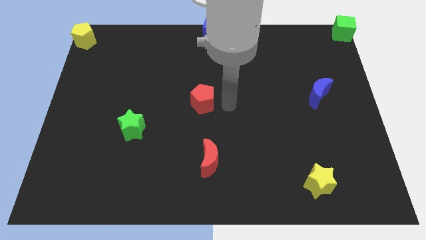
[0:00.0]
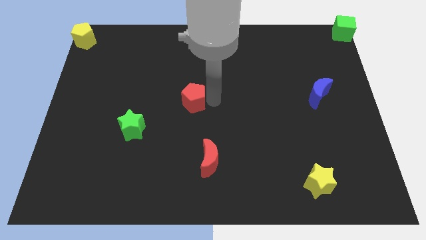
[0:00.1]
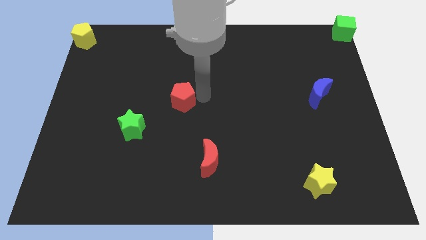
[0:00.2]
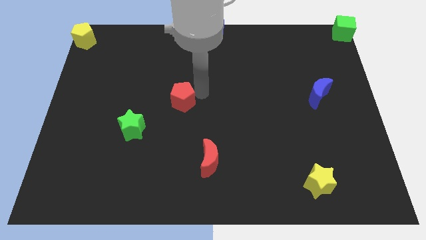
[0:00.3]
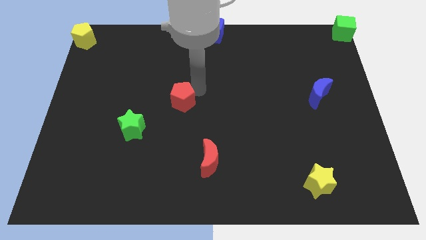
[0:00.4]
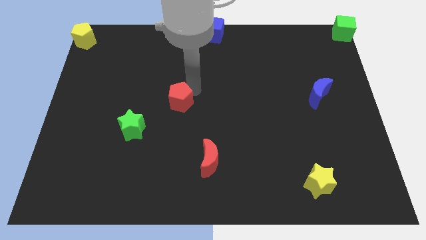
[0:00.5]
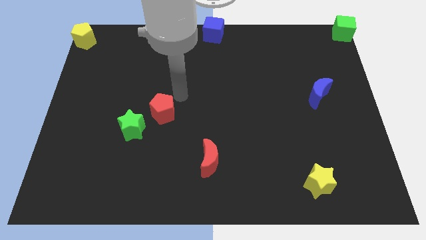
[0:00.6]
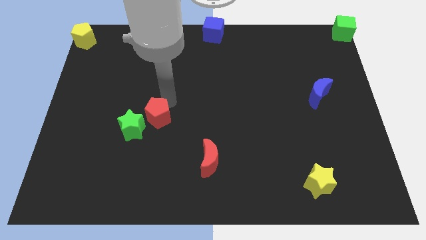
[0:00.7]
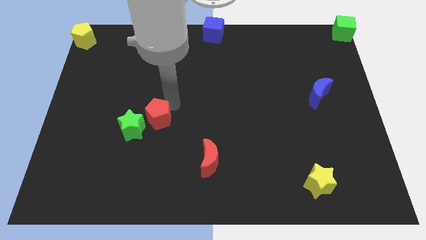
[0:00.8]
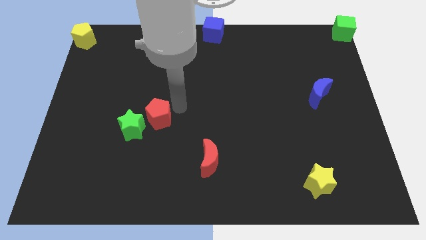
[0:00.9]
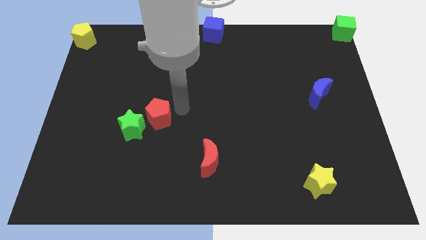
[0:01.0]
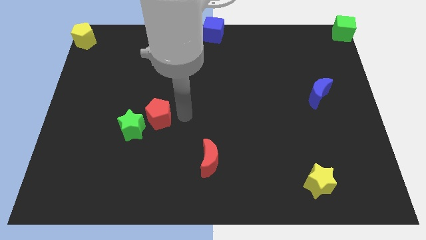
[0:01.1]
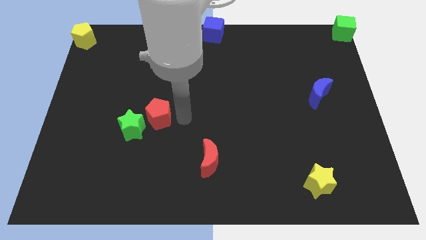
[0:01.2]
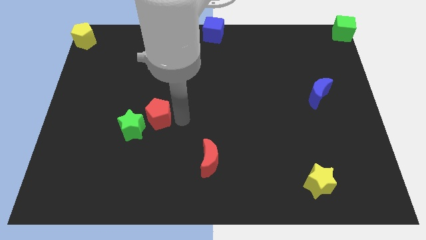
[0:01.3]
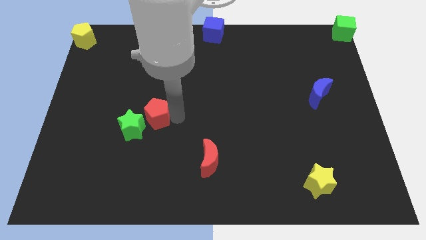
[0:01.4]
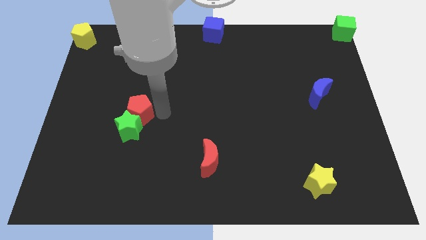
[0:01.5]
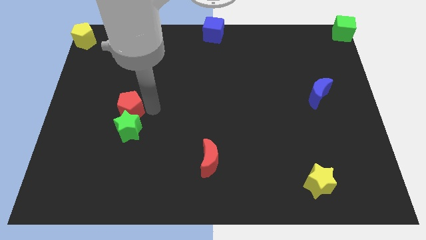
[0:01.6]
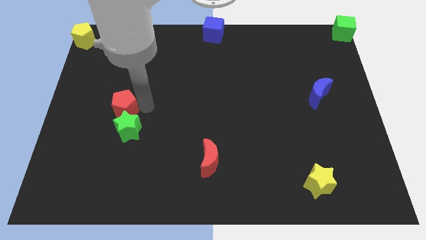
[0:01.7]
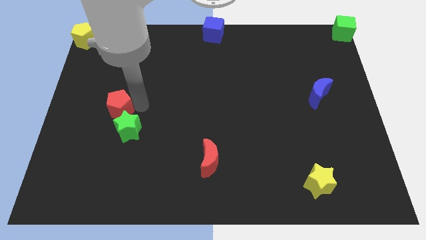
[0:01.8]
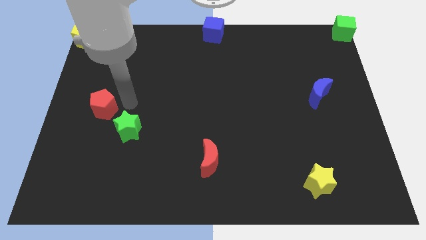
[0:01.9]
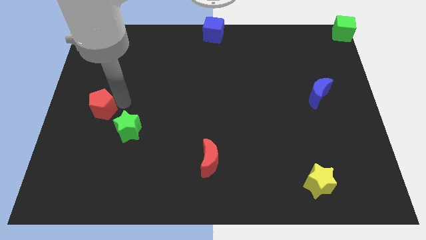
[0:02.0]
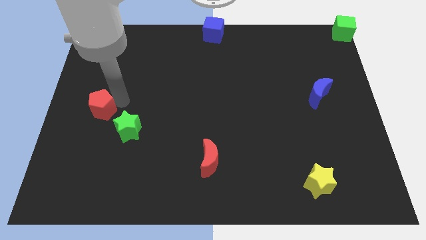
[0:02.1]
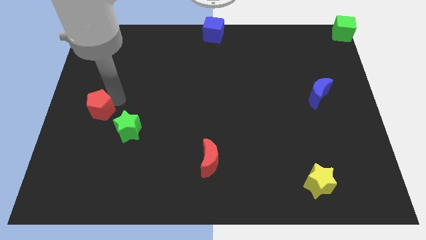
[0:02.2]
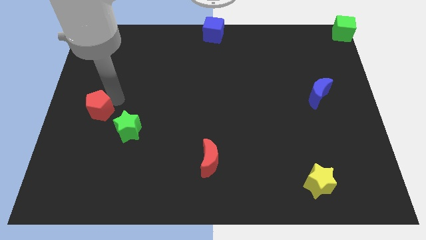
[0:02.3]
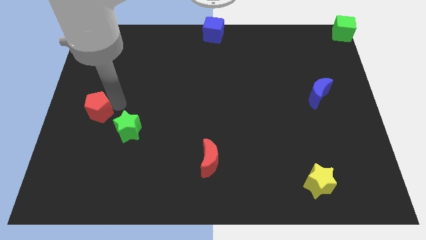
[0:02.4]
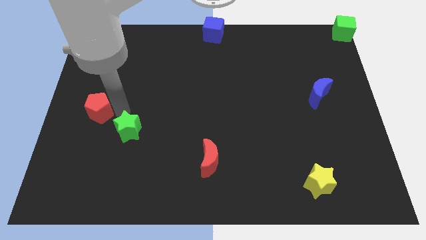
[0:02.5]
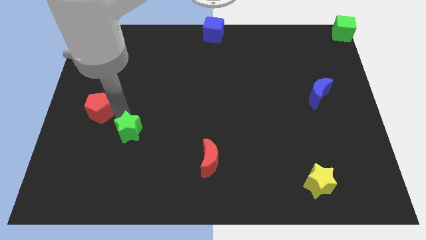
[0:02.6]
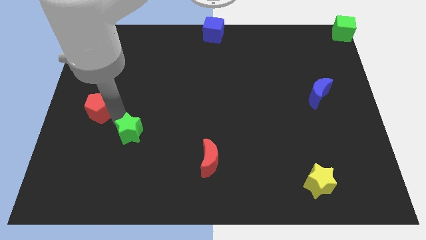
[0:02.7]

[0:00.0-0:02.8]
put the red pentagon at the top left side of the green star

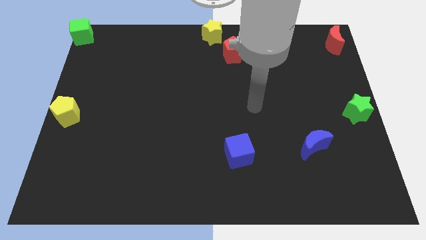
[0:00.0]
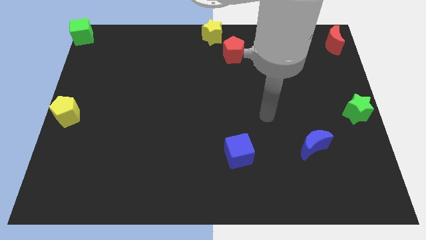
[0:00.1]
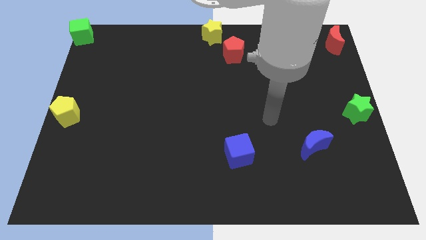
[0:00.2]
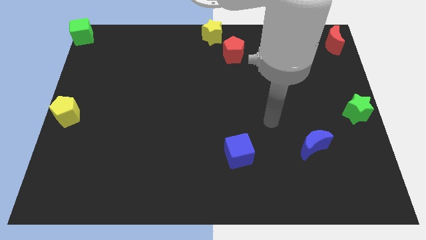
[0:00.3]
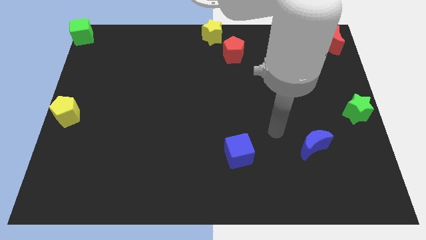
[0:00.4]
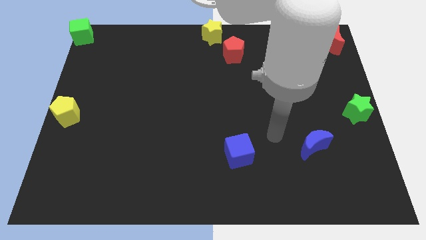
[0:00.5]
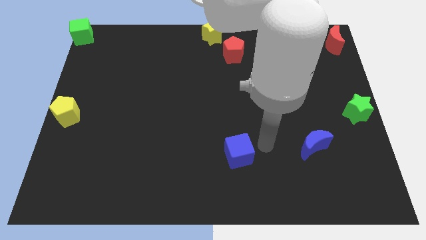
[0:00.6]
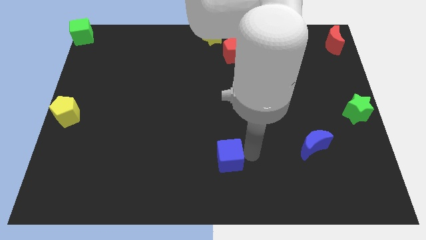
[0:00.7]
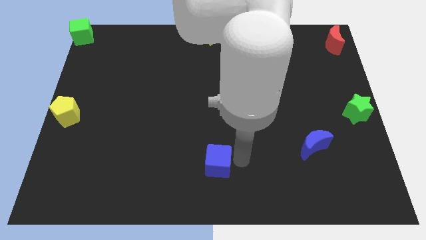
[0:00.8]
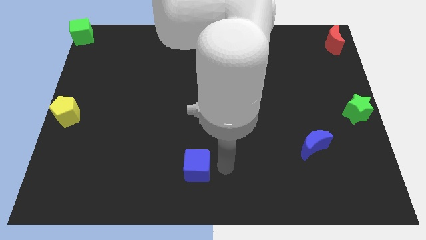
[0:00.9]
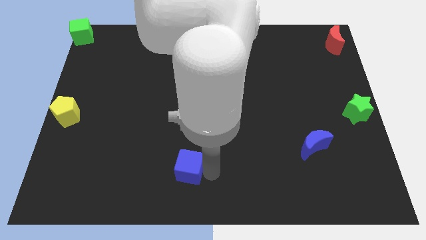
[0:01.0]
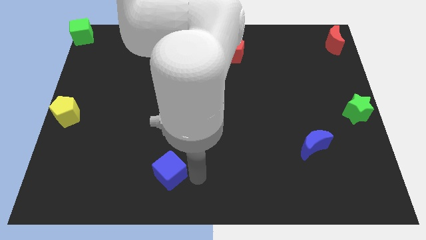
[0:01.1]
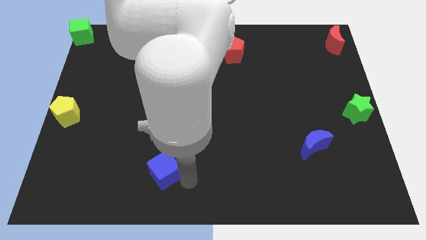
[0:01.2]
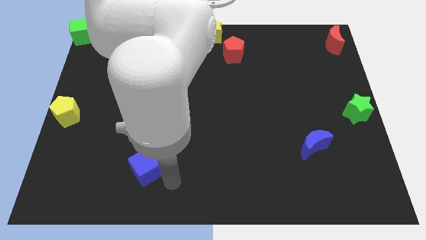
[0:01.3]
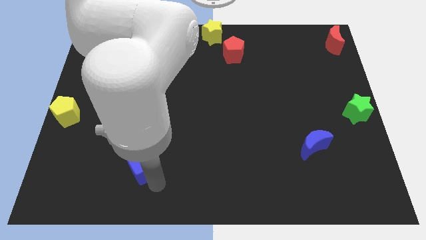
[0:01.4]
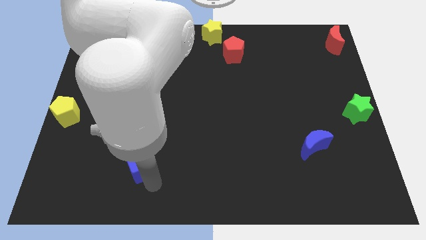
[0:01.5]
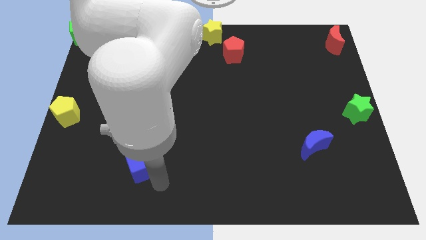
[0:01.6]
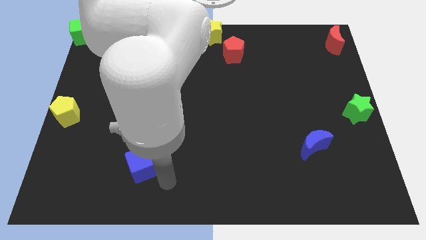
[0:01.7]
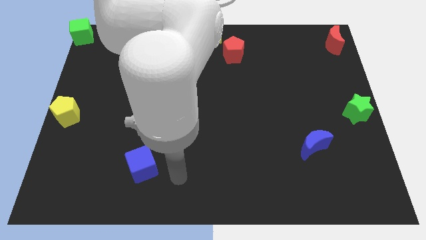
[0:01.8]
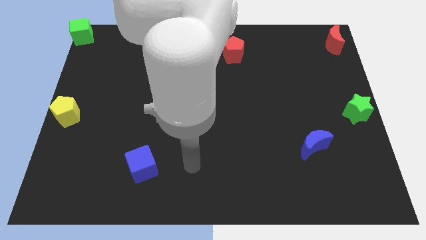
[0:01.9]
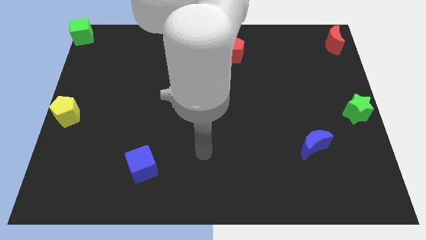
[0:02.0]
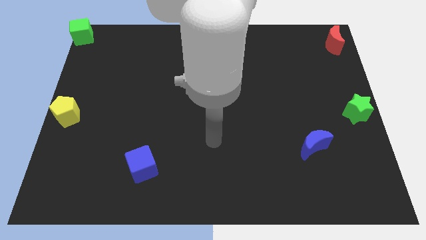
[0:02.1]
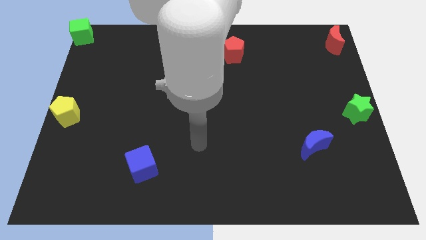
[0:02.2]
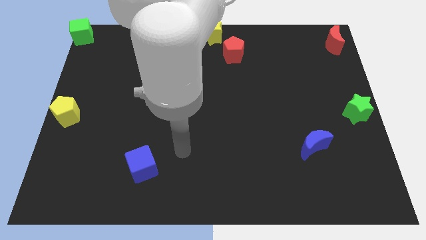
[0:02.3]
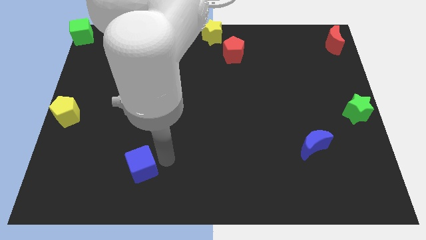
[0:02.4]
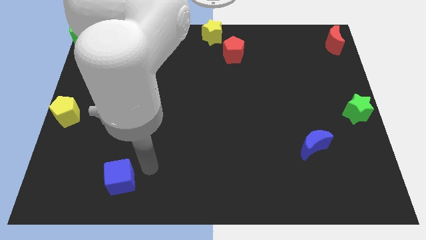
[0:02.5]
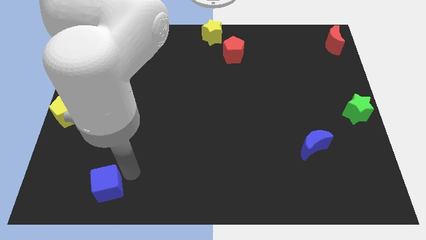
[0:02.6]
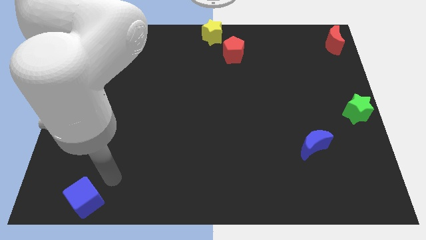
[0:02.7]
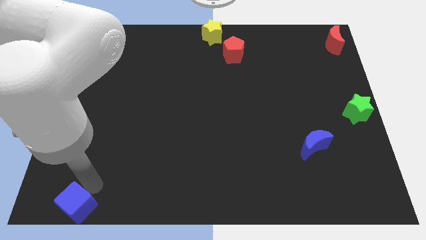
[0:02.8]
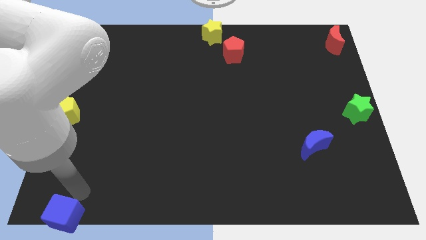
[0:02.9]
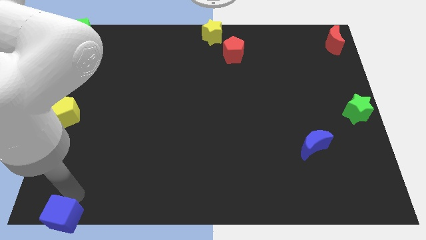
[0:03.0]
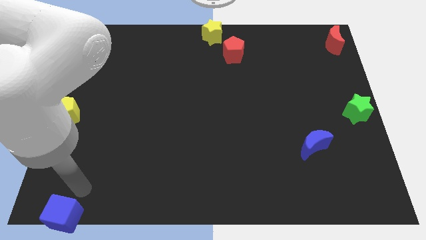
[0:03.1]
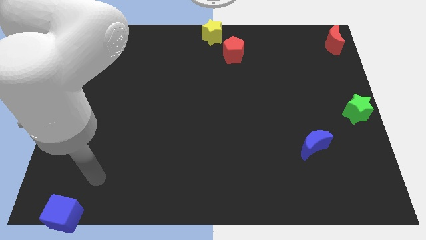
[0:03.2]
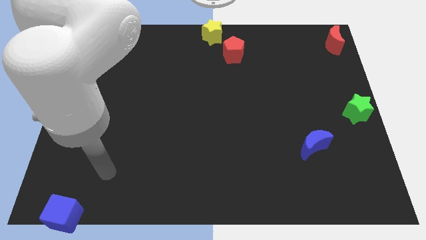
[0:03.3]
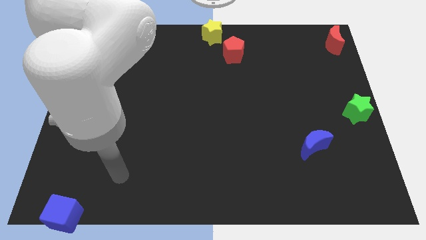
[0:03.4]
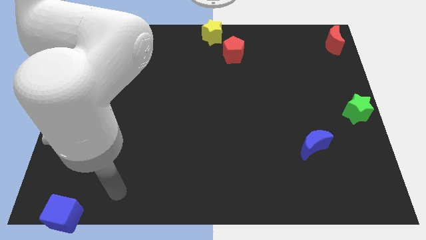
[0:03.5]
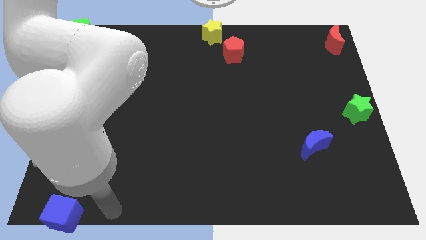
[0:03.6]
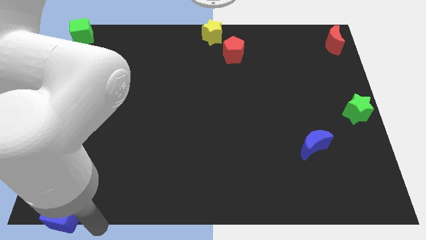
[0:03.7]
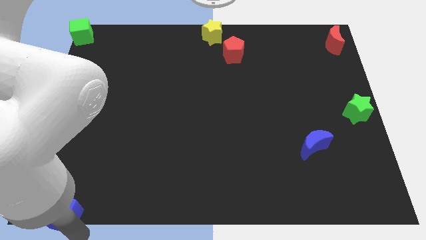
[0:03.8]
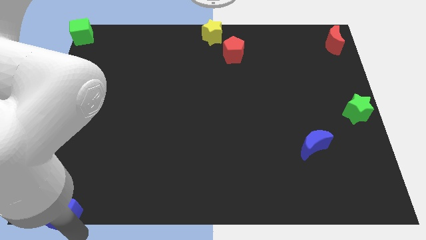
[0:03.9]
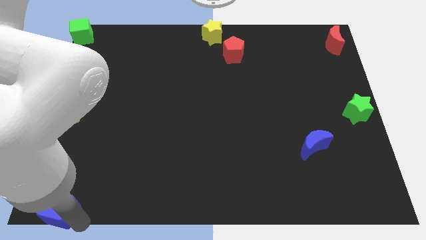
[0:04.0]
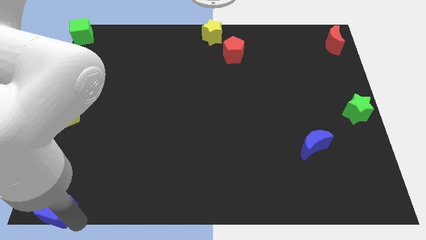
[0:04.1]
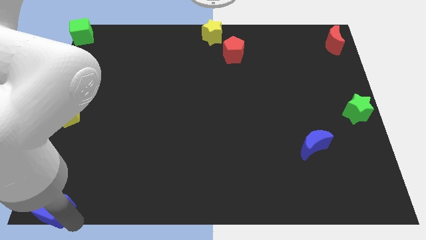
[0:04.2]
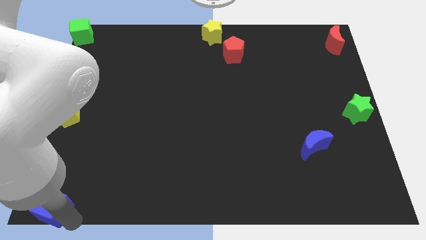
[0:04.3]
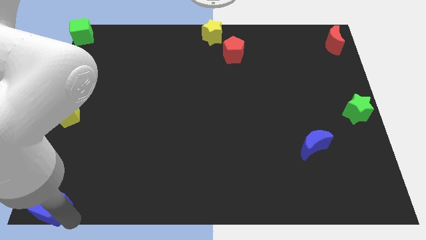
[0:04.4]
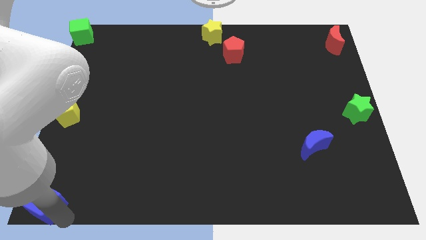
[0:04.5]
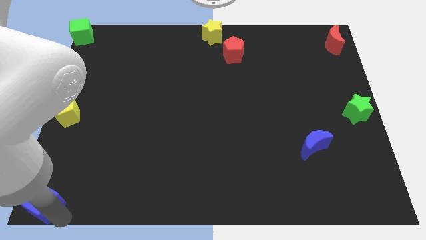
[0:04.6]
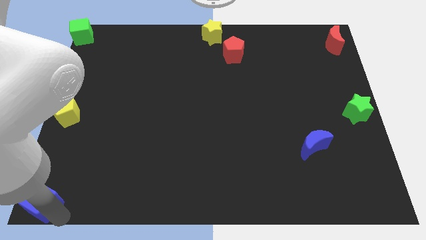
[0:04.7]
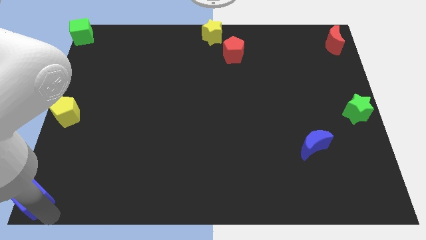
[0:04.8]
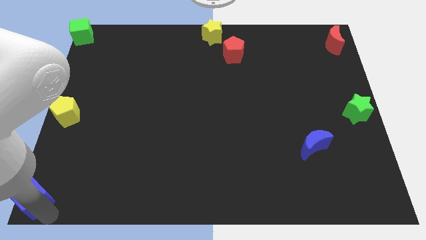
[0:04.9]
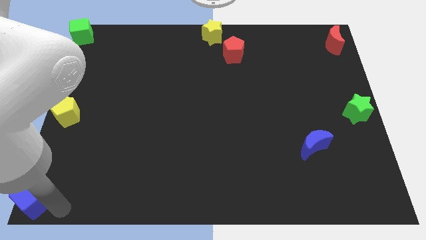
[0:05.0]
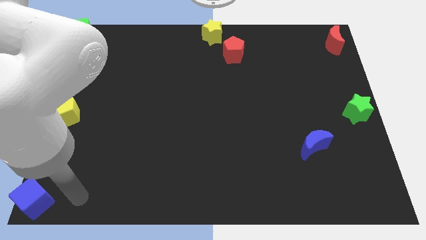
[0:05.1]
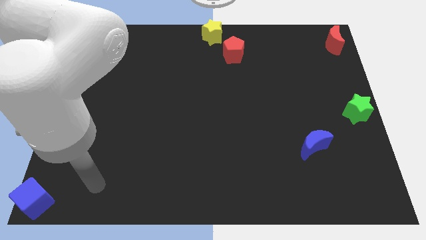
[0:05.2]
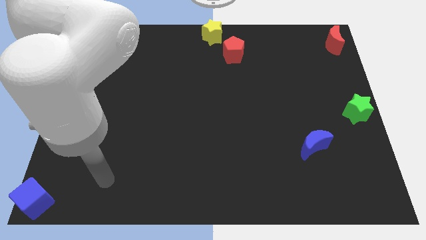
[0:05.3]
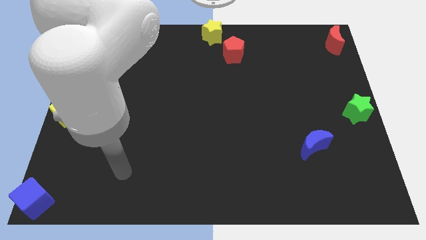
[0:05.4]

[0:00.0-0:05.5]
push the blue cube to the bottom left corner of the board

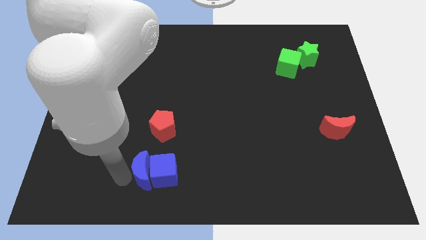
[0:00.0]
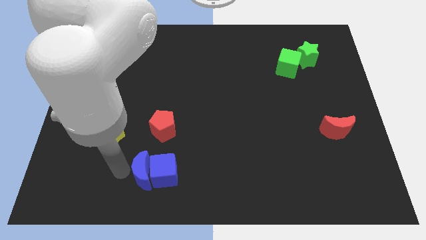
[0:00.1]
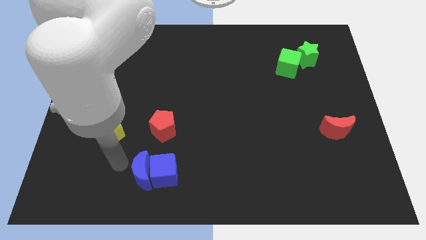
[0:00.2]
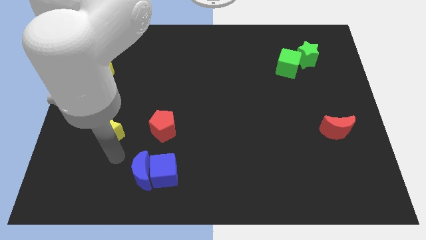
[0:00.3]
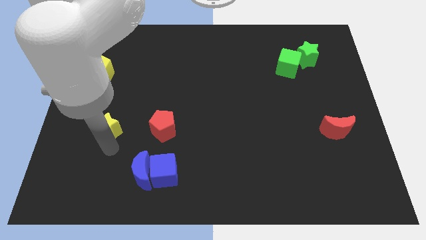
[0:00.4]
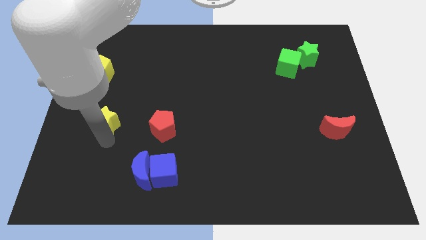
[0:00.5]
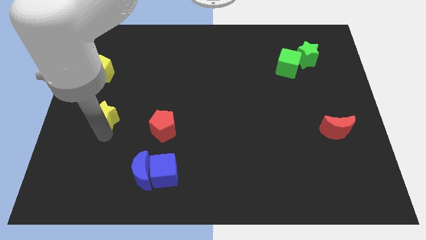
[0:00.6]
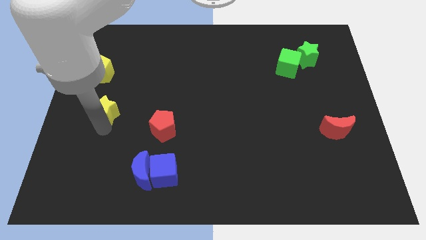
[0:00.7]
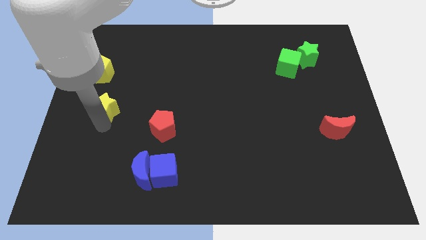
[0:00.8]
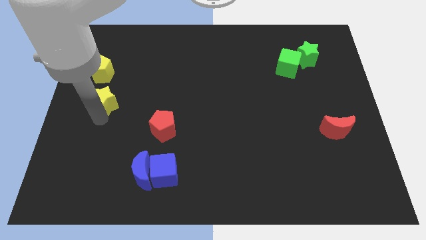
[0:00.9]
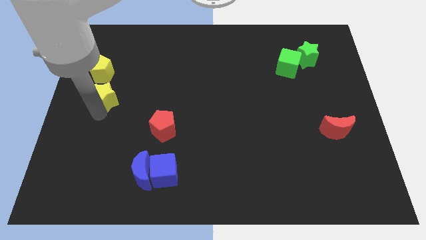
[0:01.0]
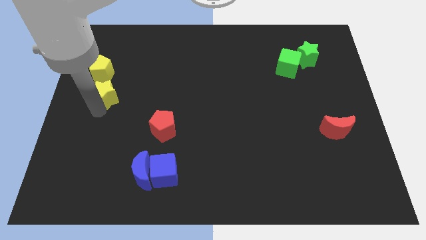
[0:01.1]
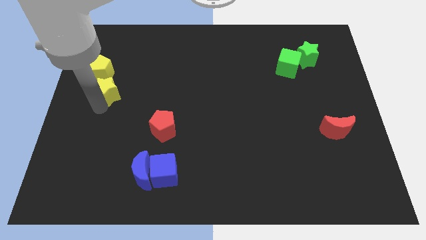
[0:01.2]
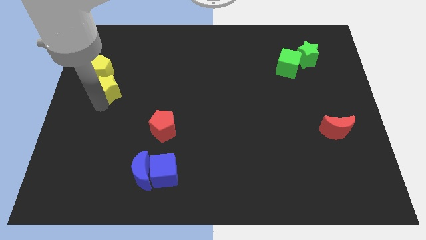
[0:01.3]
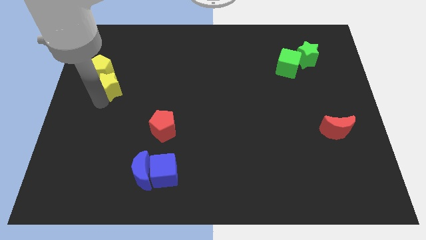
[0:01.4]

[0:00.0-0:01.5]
drag the yellow star to the bottom right of yellow pentagon
